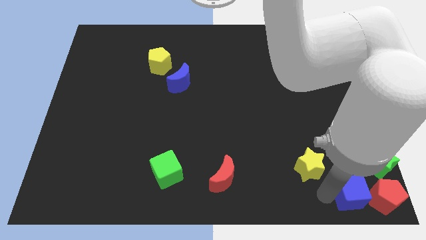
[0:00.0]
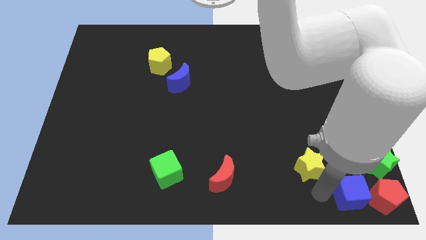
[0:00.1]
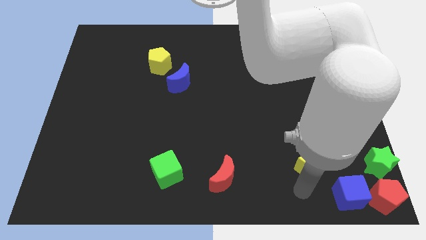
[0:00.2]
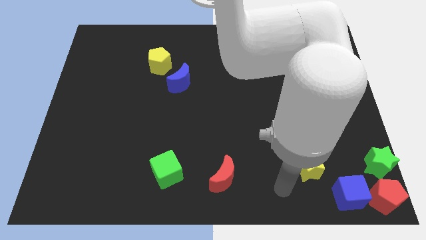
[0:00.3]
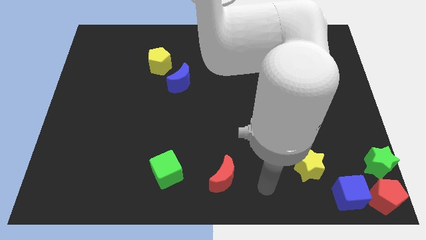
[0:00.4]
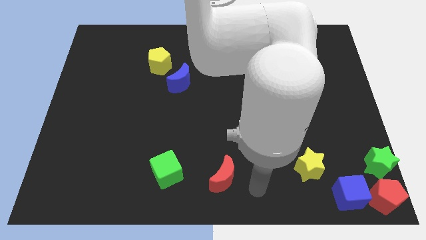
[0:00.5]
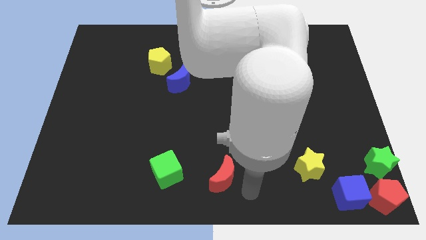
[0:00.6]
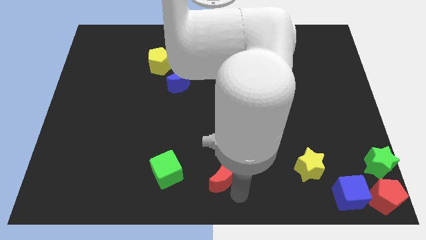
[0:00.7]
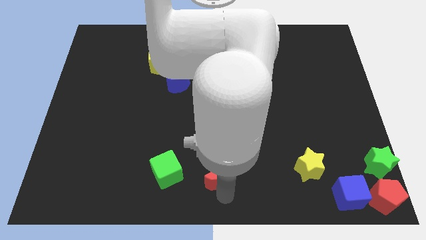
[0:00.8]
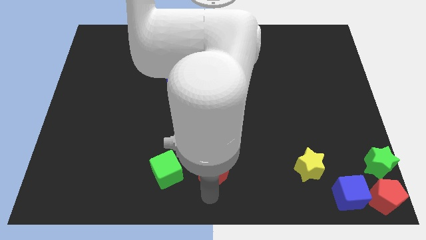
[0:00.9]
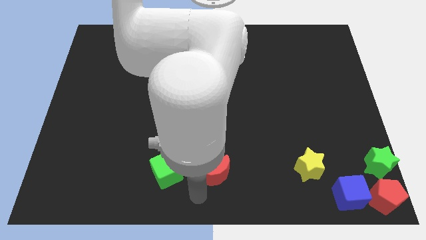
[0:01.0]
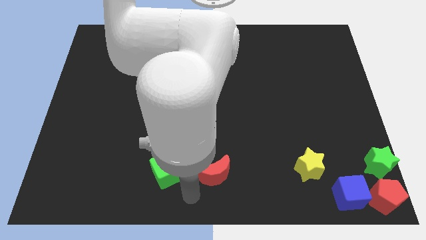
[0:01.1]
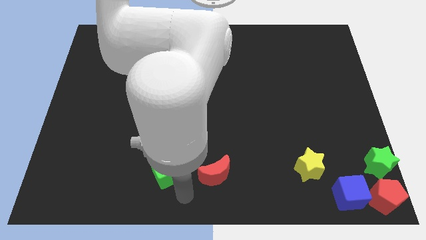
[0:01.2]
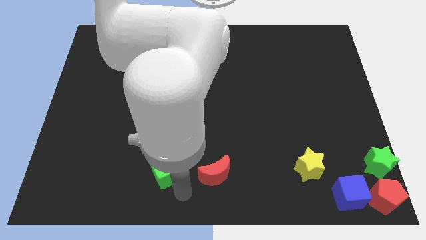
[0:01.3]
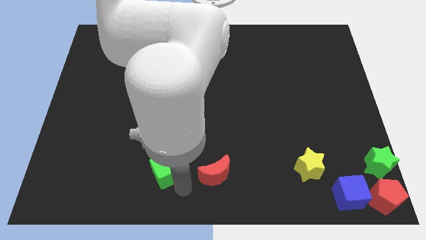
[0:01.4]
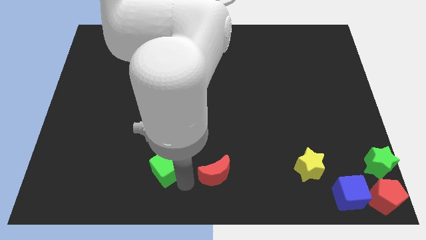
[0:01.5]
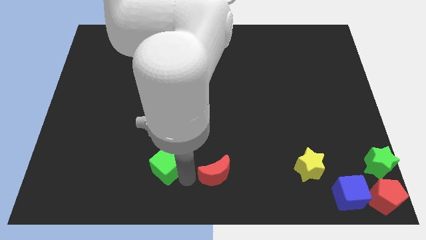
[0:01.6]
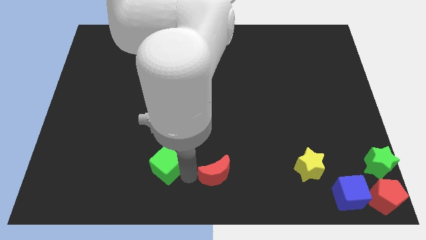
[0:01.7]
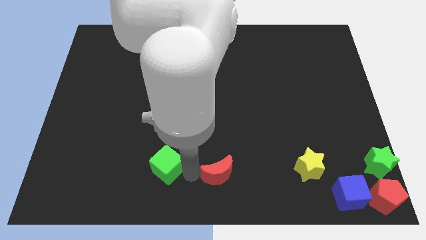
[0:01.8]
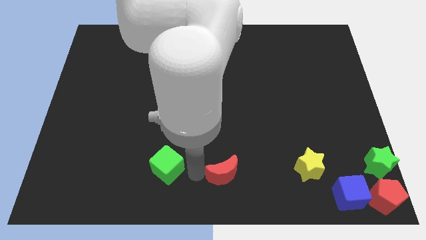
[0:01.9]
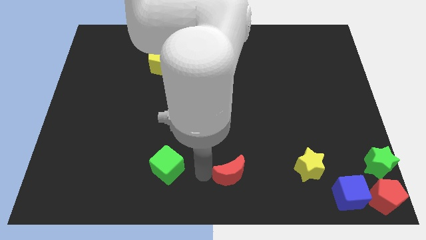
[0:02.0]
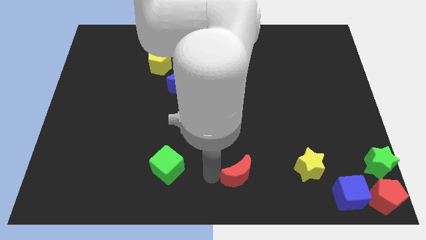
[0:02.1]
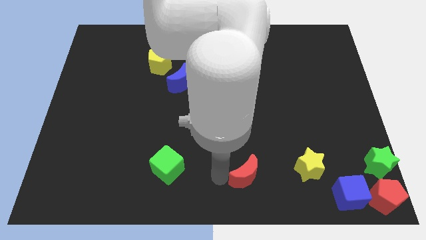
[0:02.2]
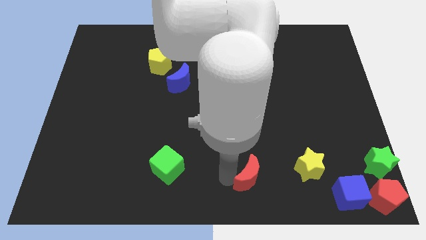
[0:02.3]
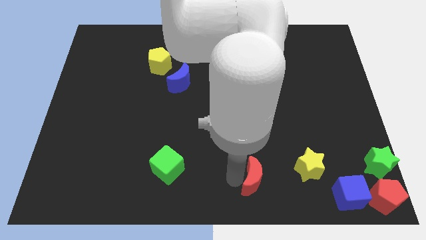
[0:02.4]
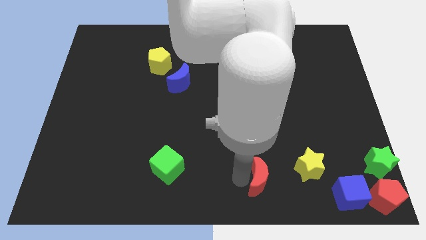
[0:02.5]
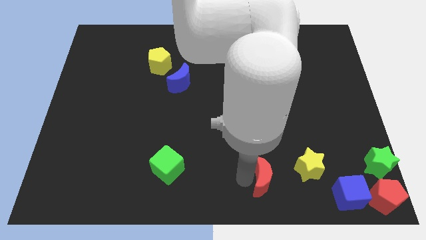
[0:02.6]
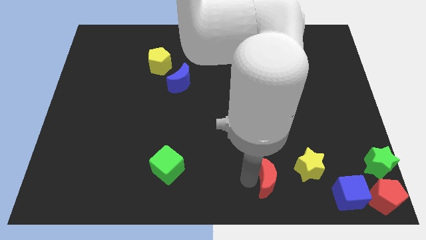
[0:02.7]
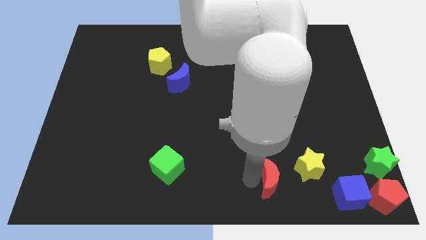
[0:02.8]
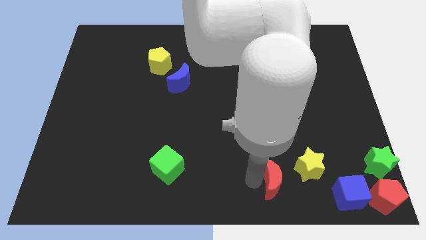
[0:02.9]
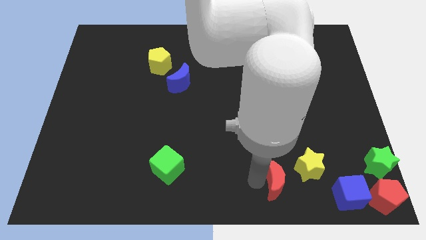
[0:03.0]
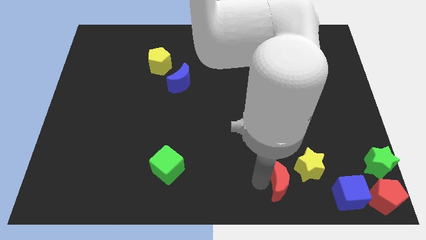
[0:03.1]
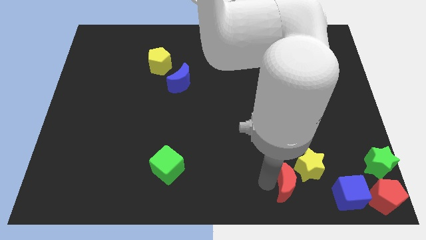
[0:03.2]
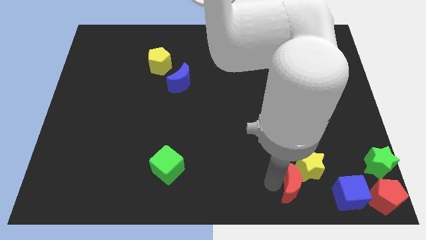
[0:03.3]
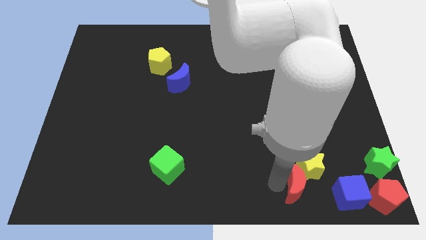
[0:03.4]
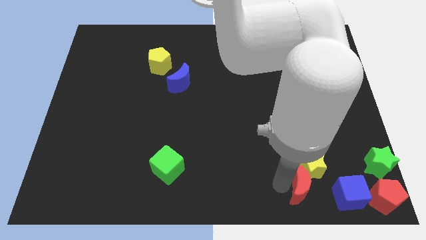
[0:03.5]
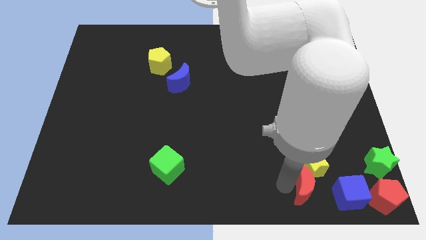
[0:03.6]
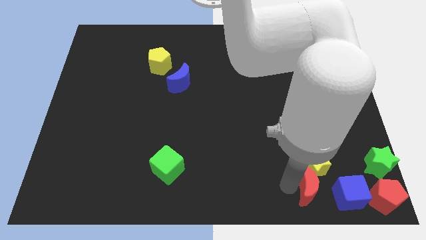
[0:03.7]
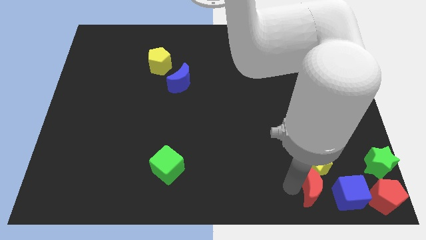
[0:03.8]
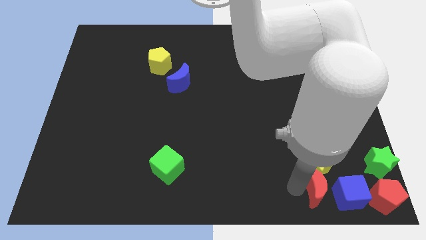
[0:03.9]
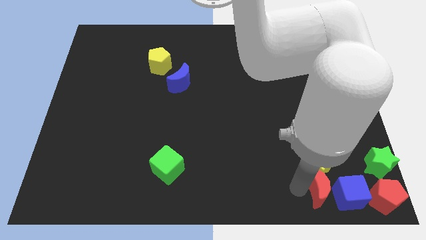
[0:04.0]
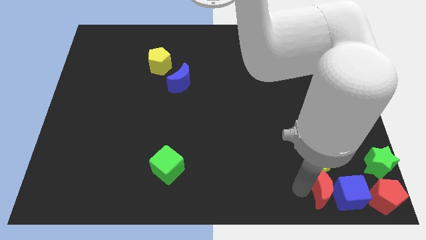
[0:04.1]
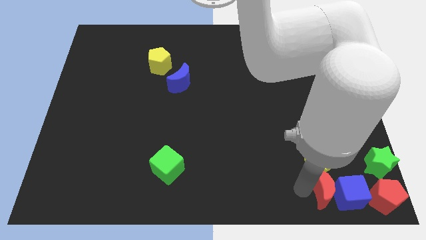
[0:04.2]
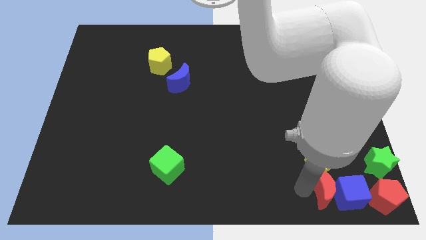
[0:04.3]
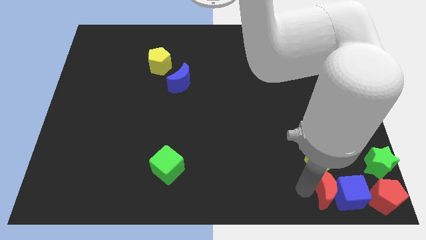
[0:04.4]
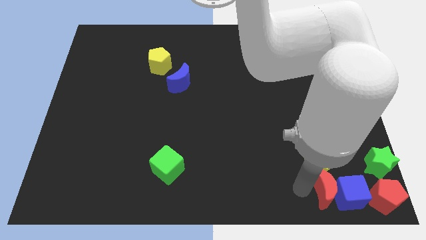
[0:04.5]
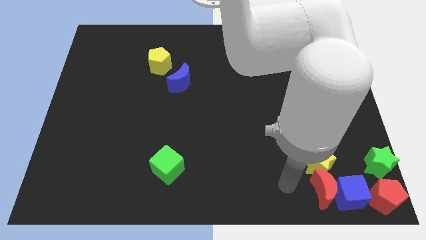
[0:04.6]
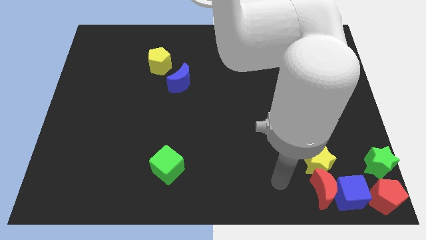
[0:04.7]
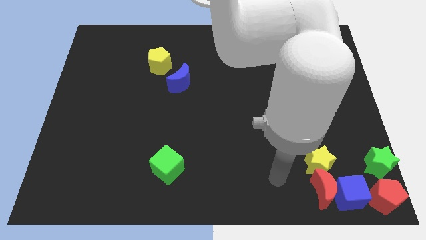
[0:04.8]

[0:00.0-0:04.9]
place the red crescent to the left of the blue cube

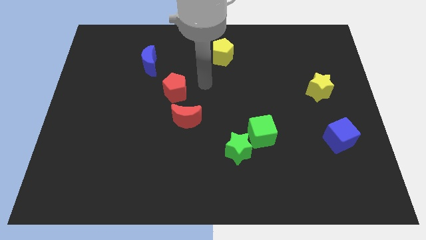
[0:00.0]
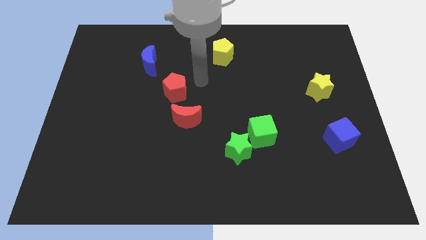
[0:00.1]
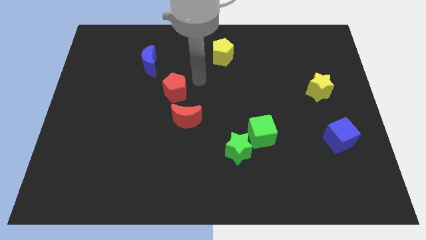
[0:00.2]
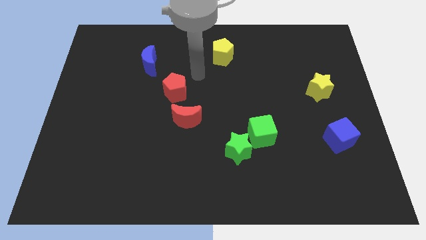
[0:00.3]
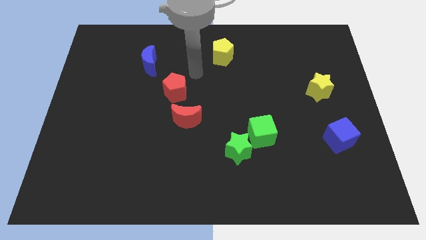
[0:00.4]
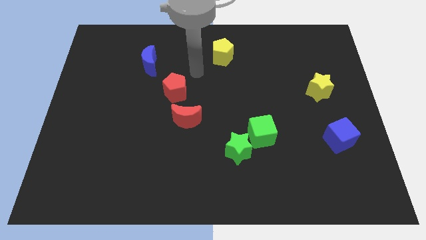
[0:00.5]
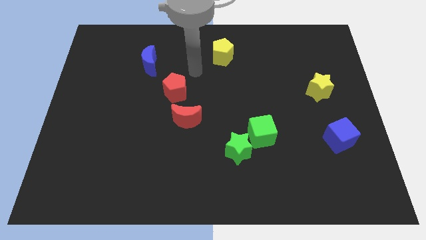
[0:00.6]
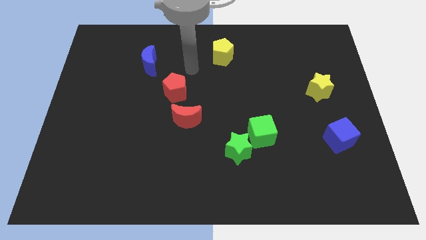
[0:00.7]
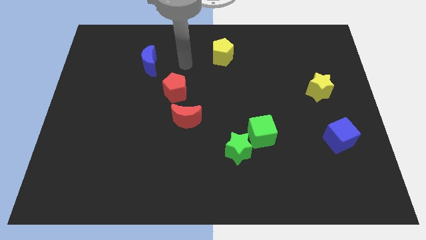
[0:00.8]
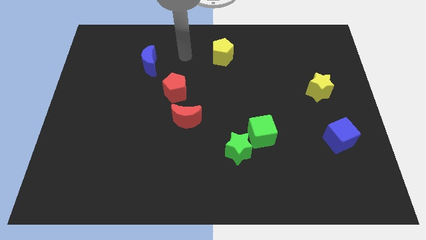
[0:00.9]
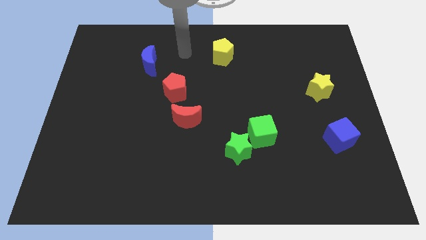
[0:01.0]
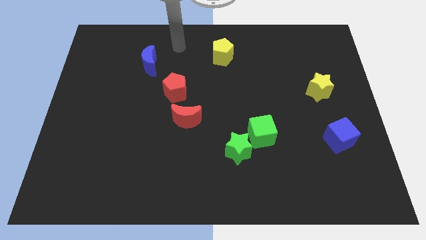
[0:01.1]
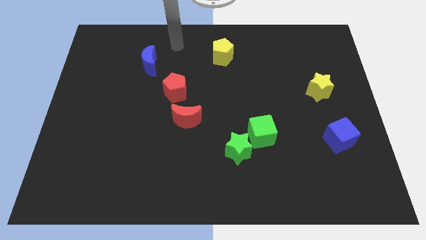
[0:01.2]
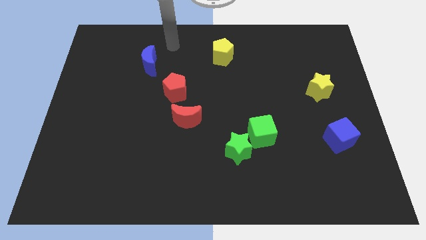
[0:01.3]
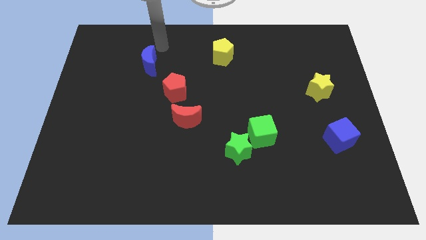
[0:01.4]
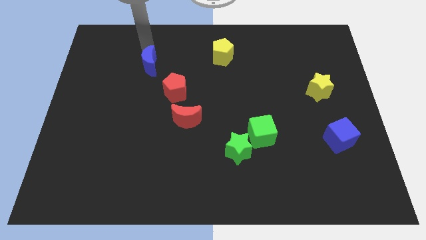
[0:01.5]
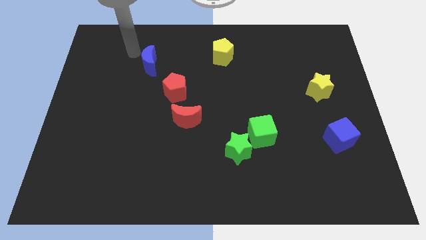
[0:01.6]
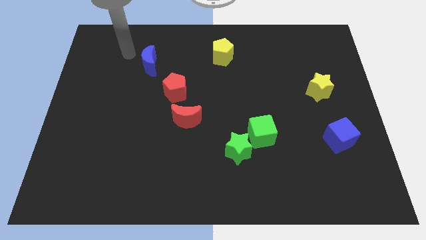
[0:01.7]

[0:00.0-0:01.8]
move the arm to the left side of the blue crescent

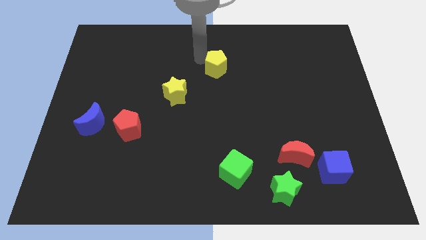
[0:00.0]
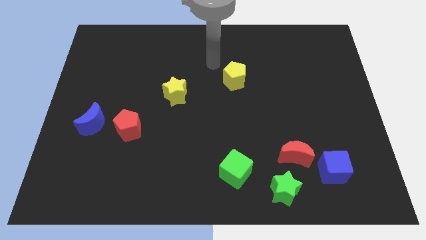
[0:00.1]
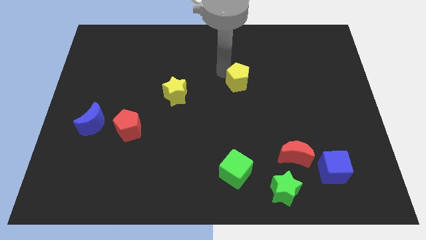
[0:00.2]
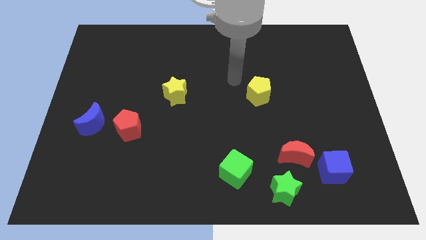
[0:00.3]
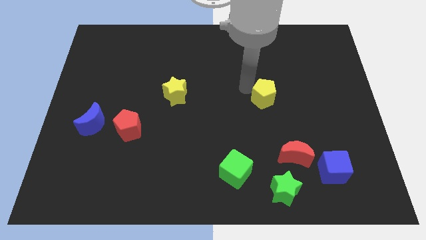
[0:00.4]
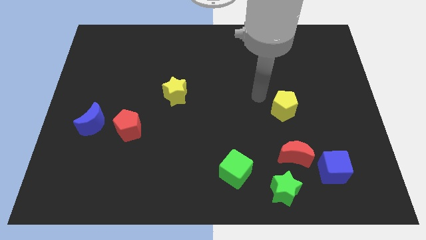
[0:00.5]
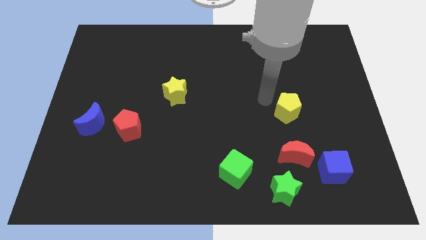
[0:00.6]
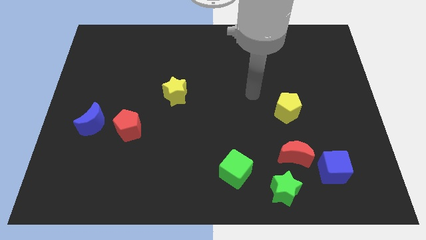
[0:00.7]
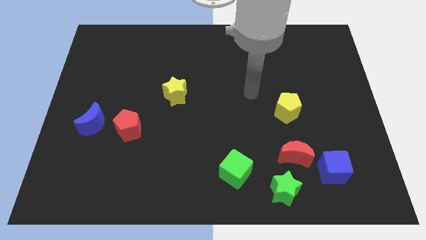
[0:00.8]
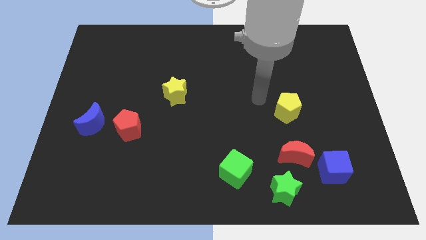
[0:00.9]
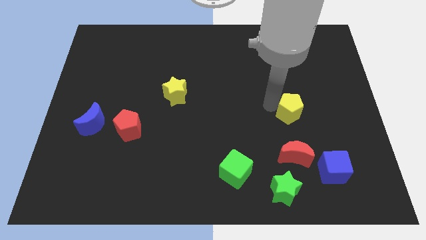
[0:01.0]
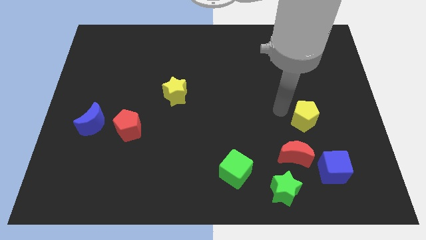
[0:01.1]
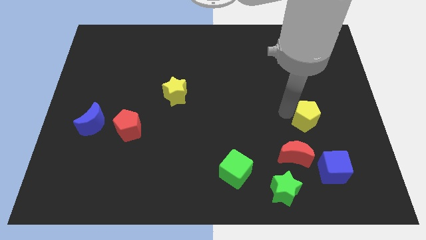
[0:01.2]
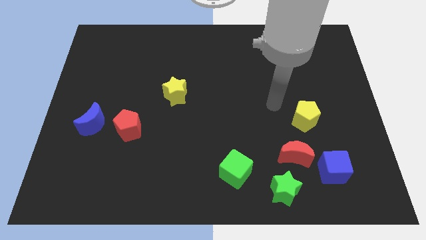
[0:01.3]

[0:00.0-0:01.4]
push the yellow pentagon to the top of the red crescent

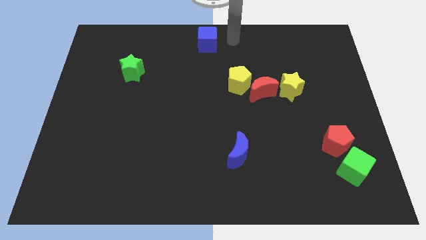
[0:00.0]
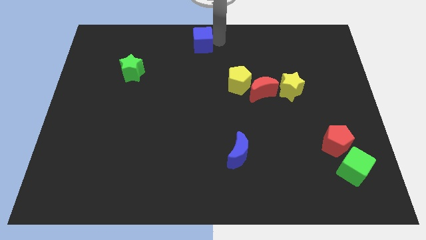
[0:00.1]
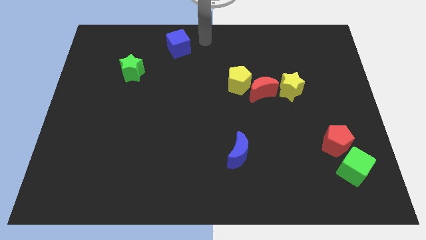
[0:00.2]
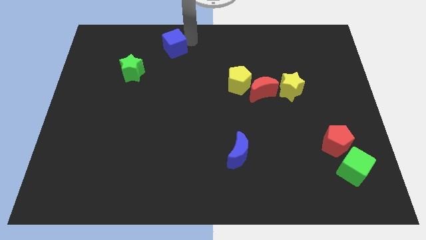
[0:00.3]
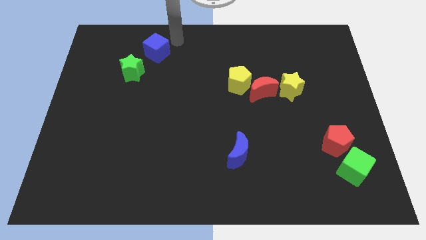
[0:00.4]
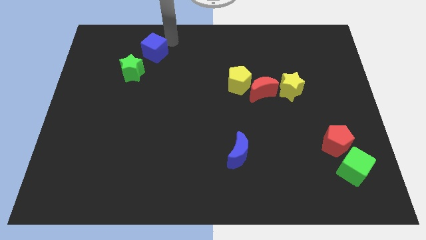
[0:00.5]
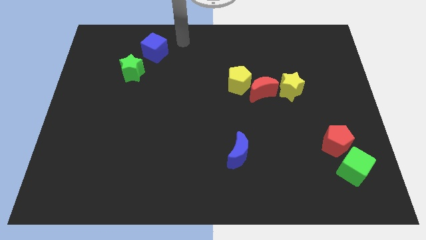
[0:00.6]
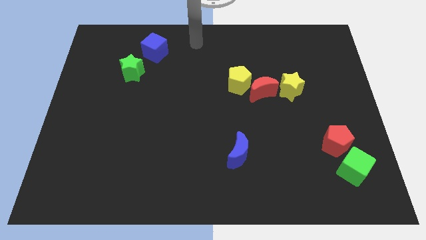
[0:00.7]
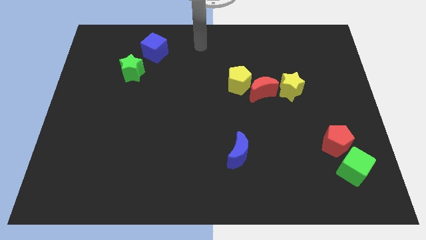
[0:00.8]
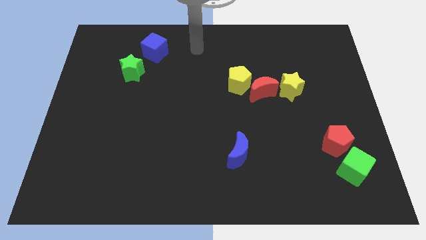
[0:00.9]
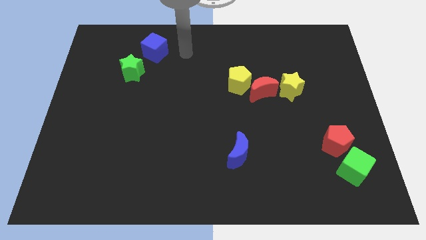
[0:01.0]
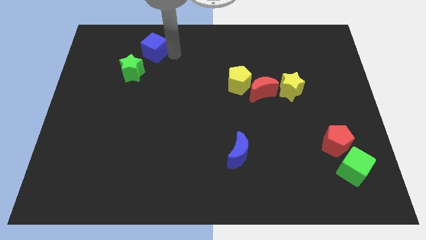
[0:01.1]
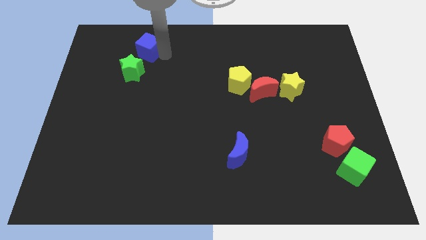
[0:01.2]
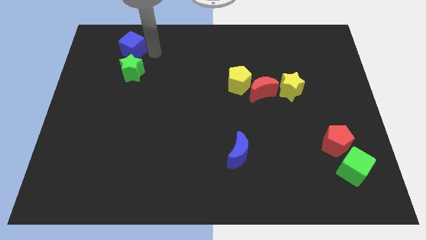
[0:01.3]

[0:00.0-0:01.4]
move the blue cube to the top of the green star
